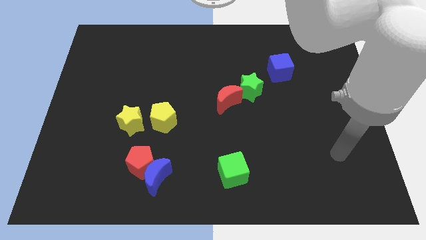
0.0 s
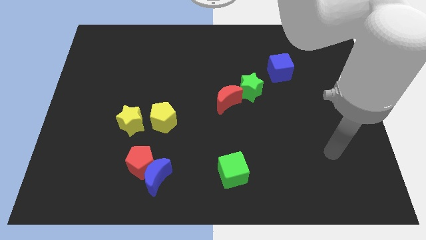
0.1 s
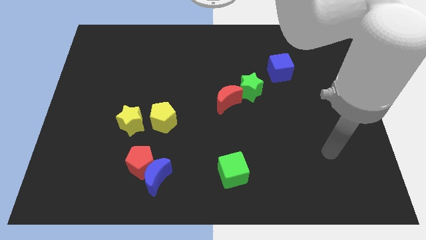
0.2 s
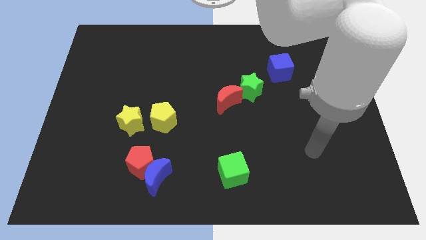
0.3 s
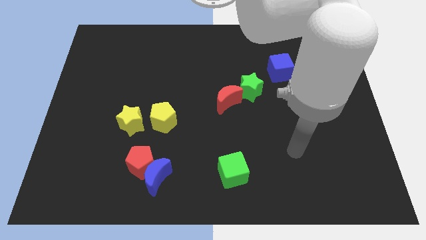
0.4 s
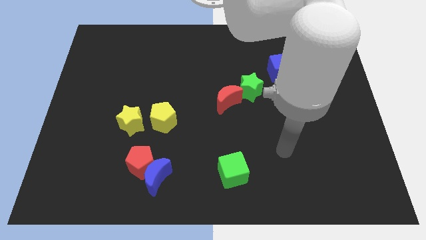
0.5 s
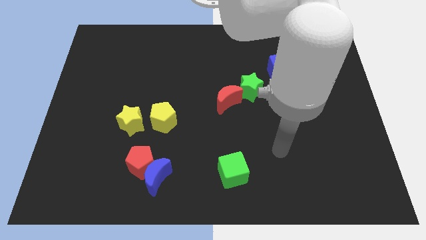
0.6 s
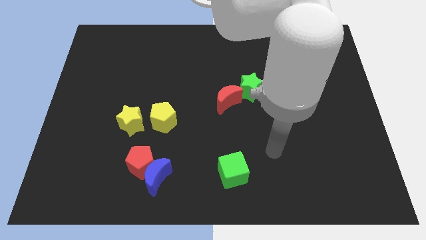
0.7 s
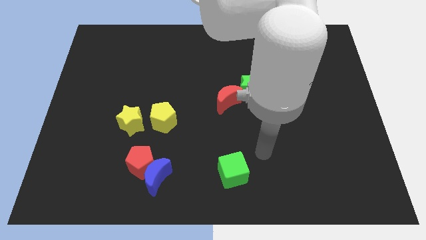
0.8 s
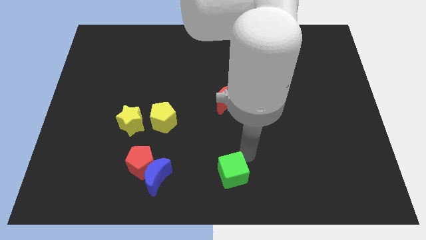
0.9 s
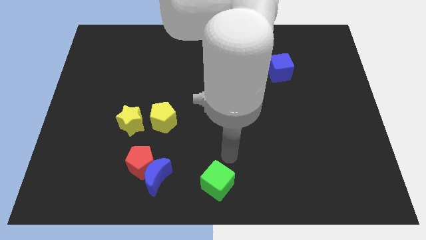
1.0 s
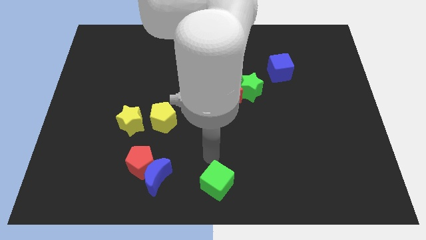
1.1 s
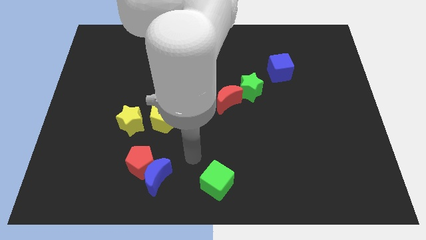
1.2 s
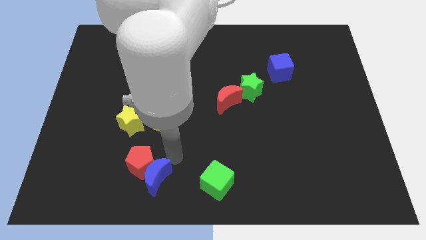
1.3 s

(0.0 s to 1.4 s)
push the green cube slightly down

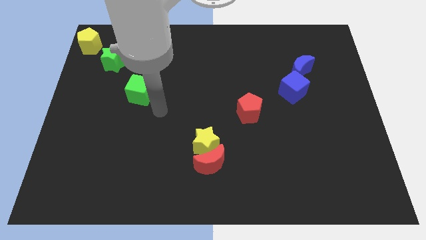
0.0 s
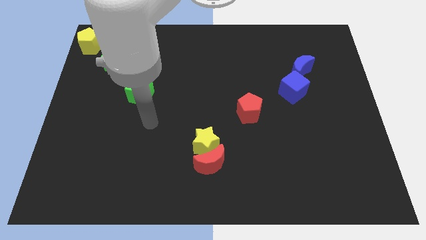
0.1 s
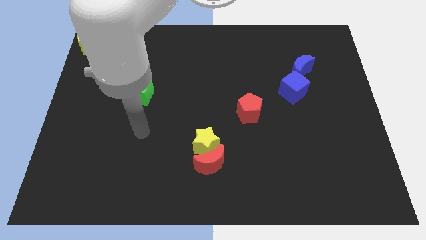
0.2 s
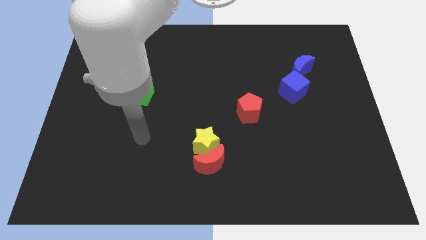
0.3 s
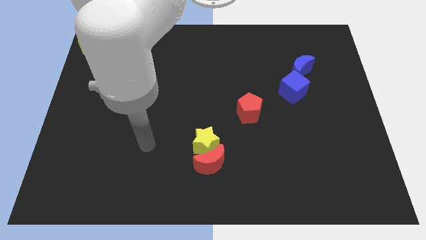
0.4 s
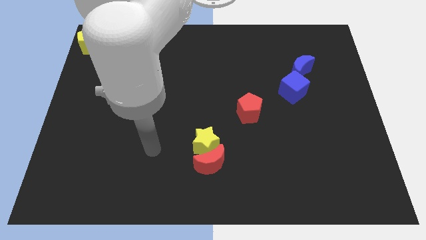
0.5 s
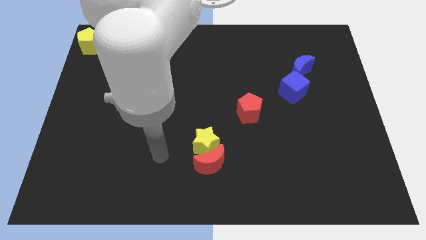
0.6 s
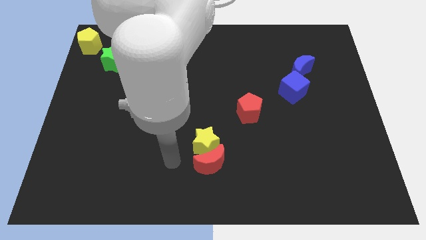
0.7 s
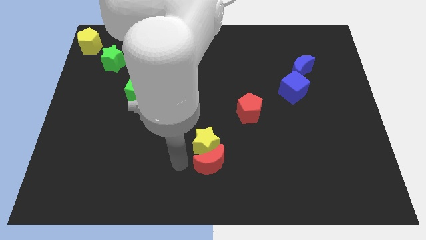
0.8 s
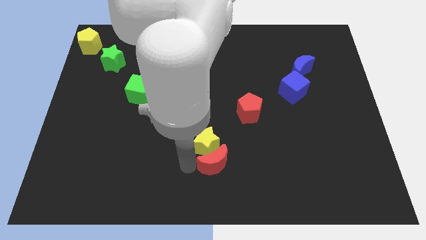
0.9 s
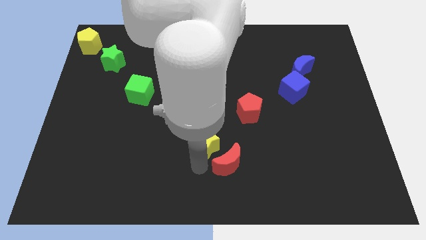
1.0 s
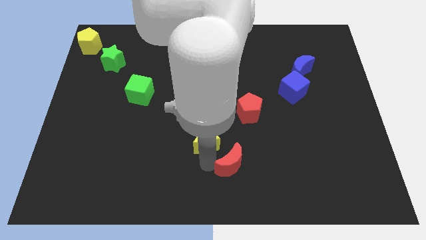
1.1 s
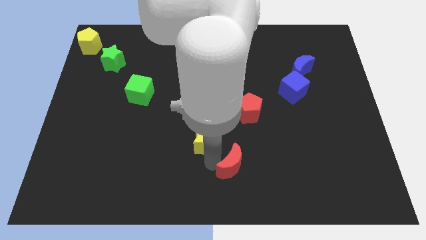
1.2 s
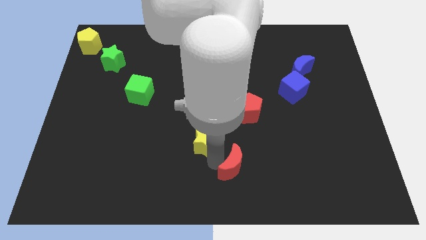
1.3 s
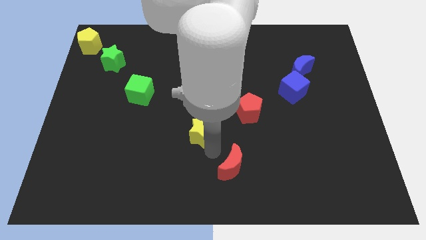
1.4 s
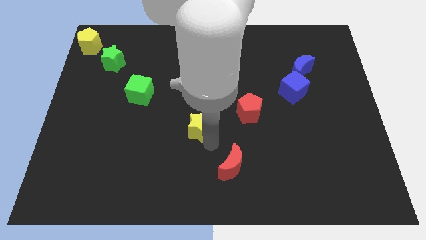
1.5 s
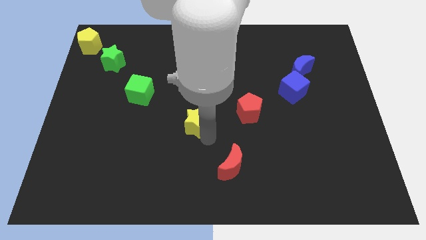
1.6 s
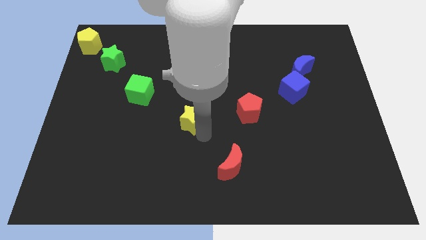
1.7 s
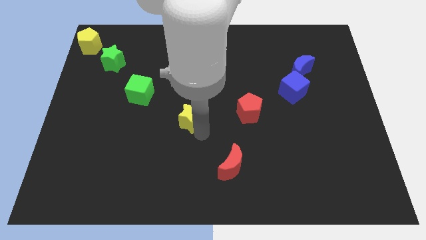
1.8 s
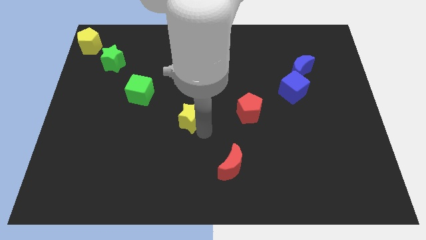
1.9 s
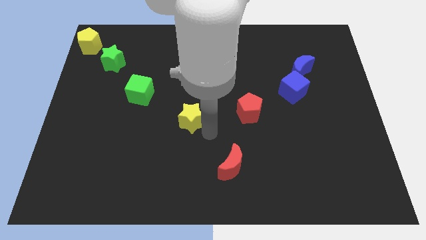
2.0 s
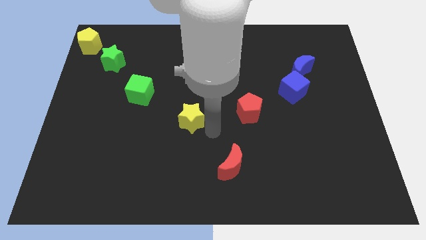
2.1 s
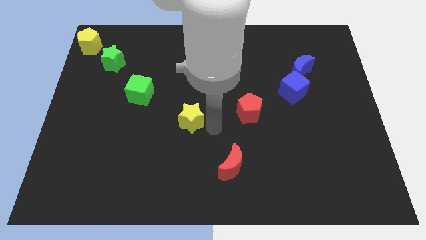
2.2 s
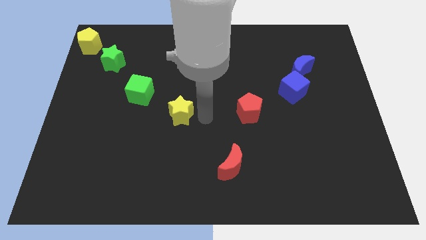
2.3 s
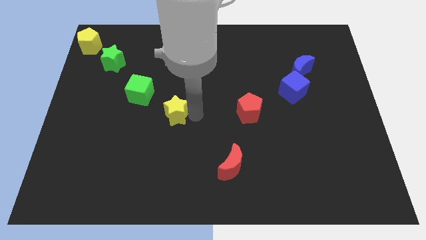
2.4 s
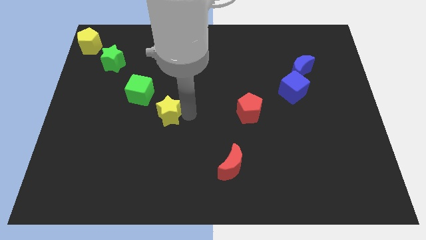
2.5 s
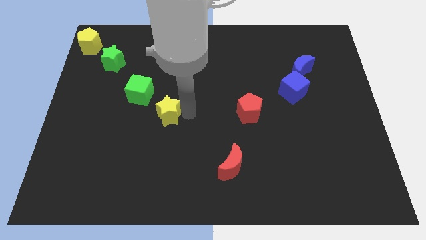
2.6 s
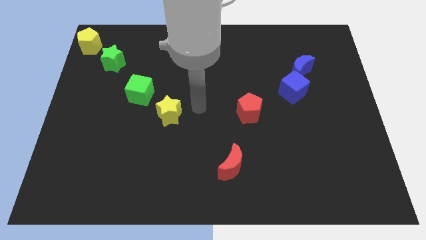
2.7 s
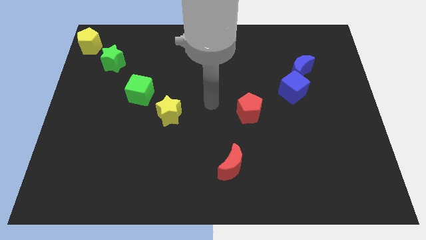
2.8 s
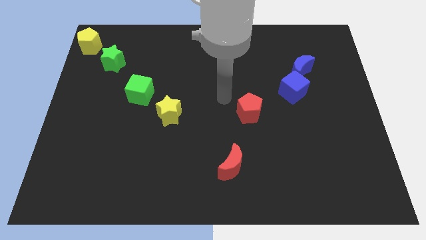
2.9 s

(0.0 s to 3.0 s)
place the yellow star parallel to red pentagon

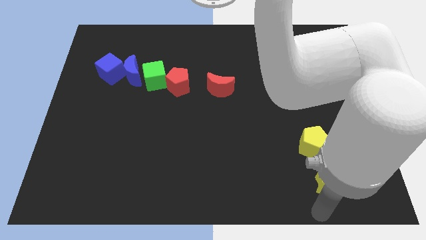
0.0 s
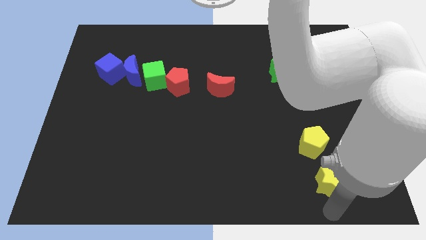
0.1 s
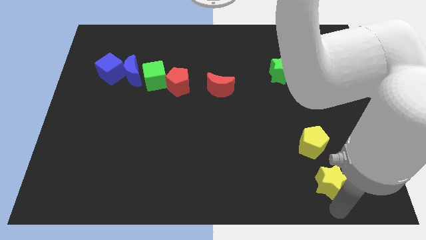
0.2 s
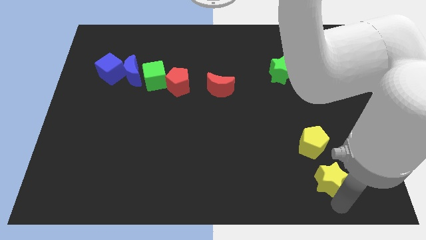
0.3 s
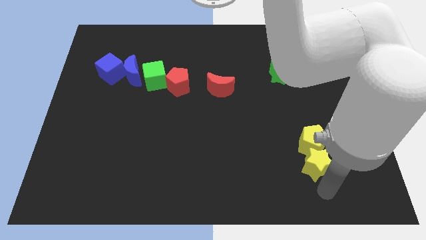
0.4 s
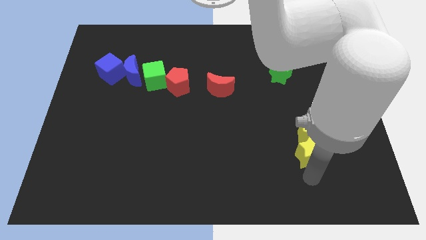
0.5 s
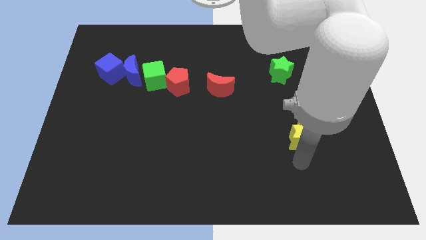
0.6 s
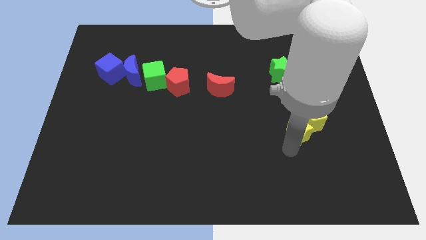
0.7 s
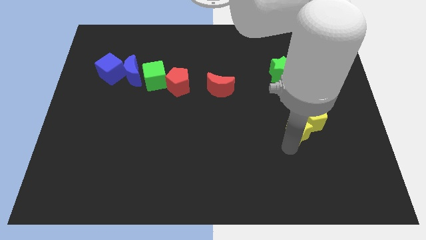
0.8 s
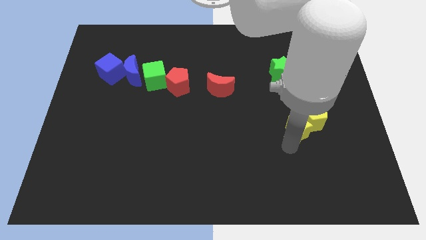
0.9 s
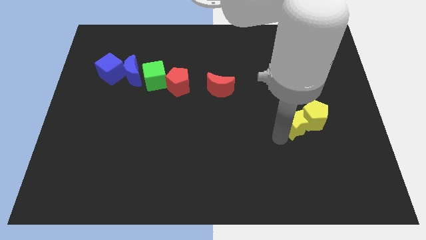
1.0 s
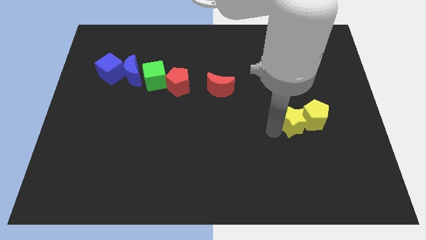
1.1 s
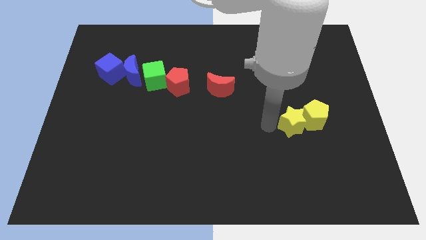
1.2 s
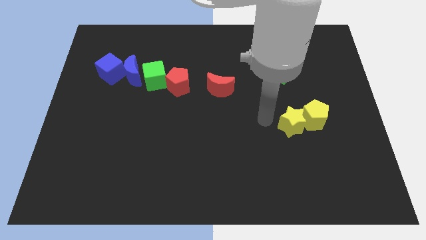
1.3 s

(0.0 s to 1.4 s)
push the yellow star into the yellow pentagon

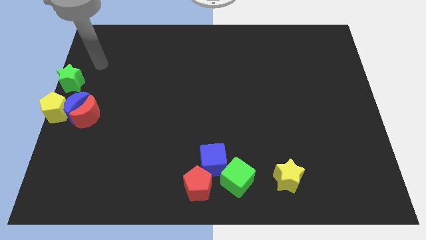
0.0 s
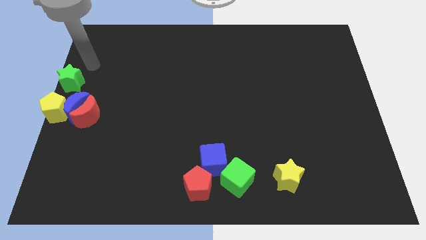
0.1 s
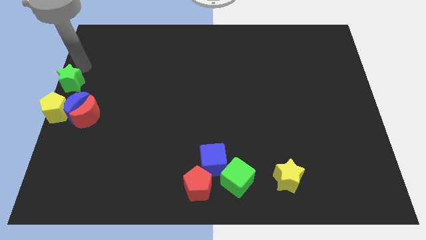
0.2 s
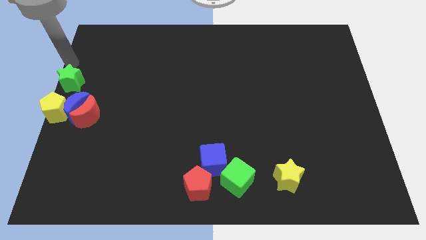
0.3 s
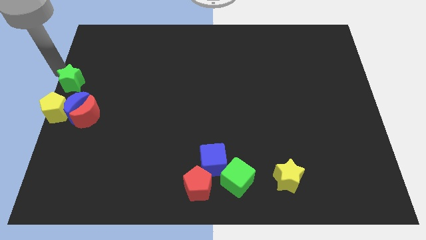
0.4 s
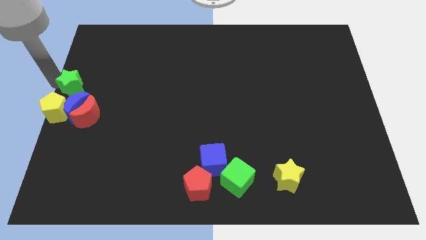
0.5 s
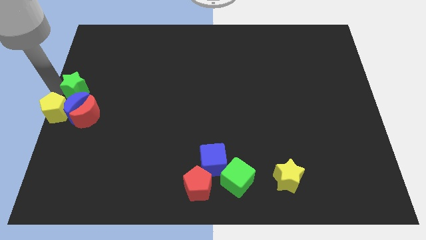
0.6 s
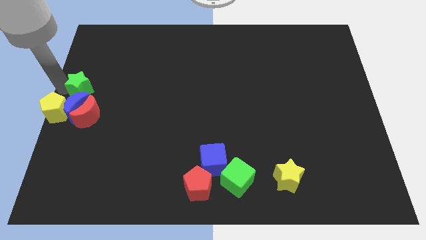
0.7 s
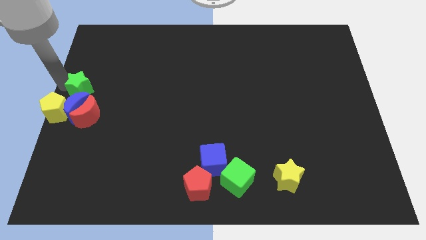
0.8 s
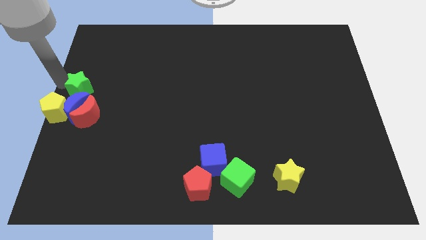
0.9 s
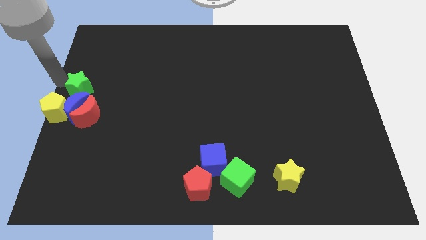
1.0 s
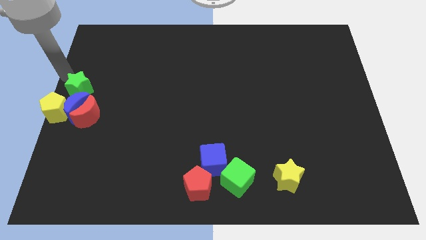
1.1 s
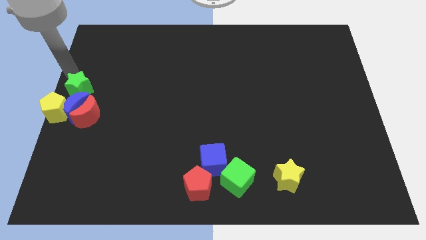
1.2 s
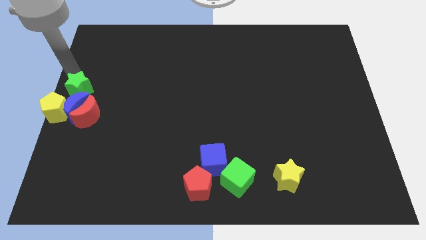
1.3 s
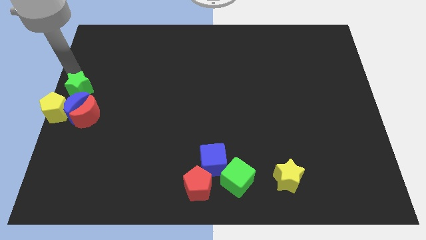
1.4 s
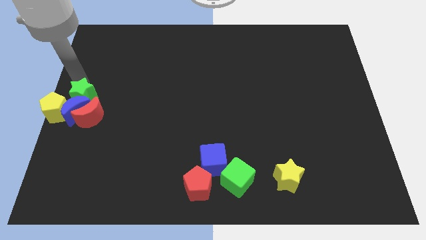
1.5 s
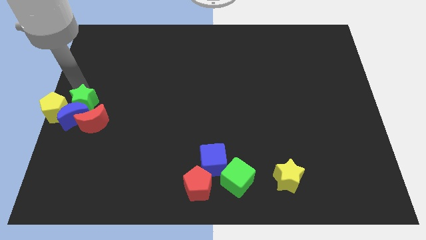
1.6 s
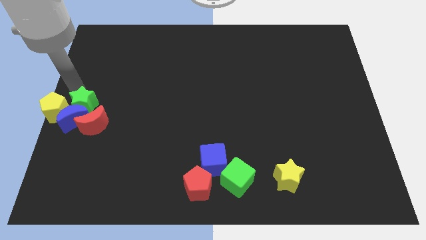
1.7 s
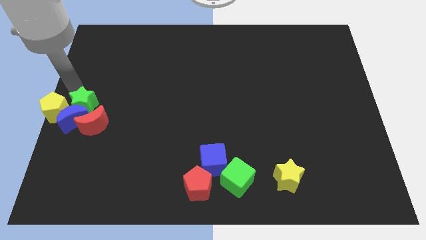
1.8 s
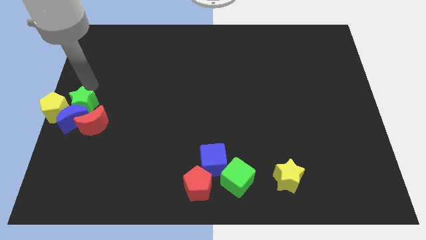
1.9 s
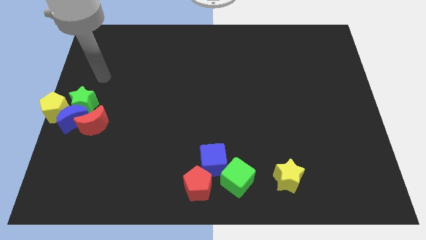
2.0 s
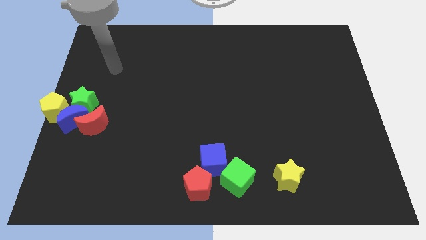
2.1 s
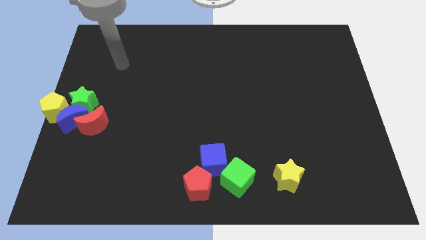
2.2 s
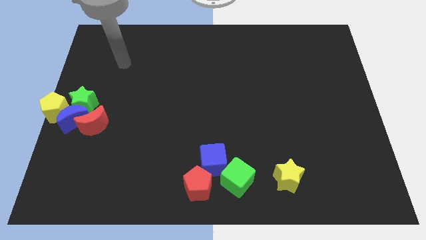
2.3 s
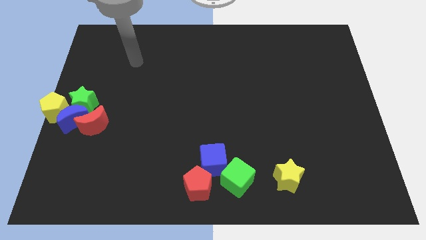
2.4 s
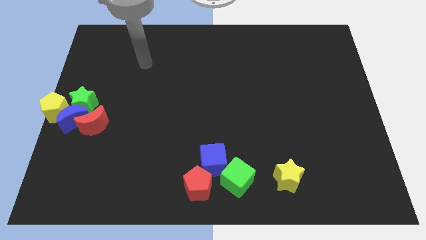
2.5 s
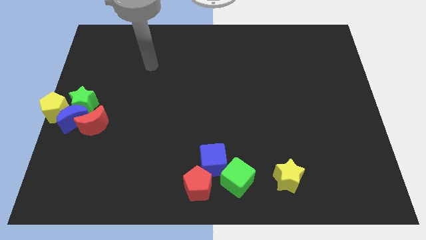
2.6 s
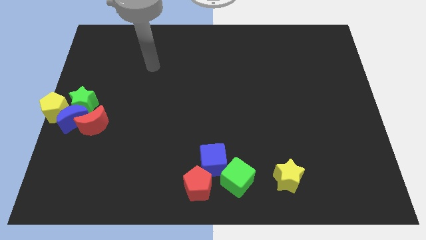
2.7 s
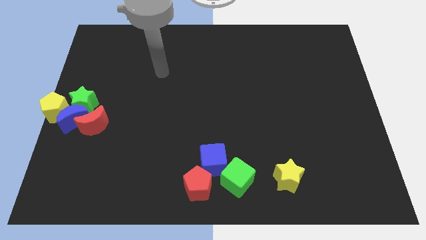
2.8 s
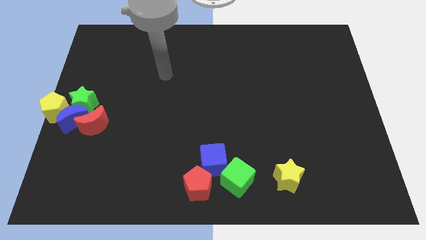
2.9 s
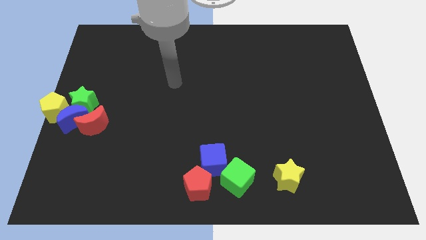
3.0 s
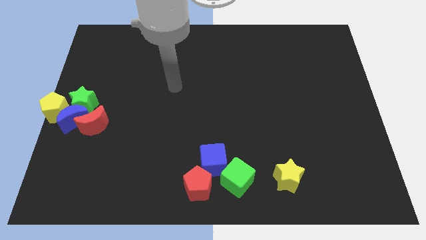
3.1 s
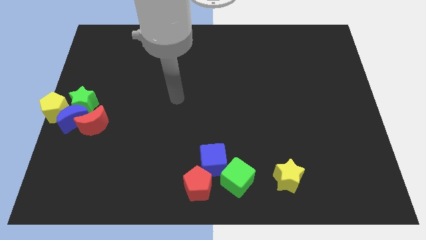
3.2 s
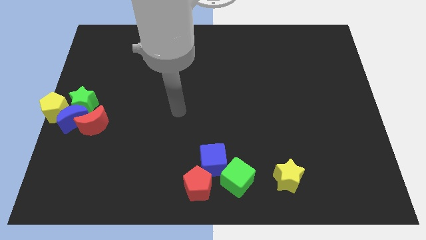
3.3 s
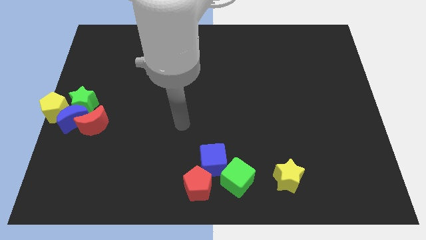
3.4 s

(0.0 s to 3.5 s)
push green star into blue crescent

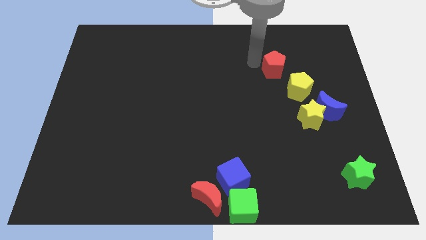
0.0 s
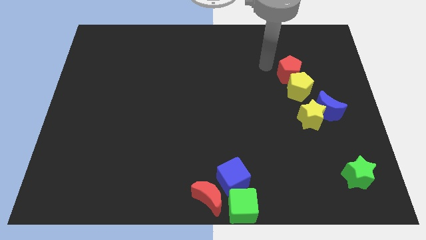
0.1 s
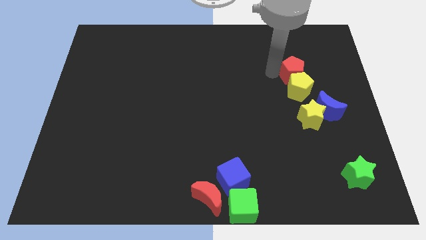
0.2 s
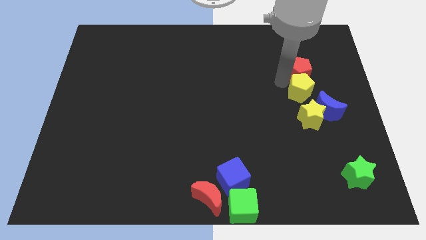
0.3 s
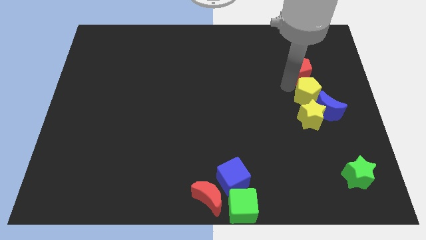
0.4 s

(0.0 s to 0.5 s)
make the red pentagon to touch the top side of the yellow pentagon
